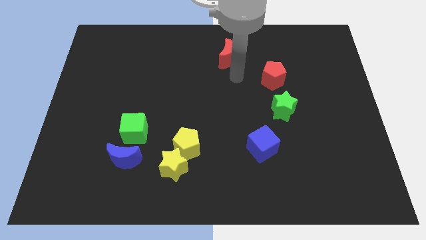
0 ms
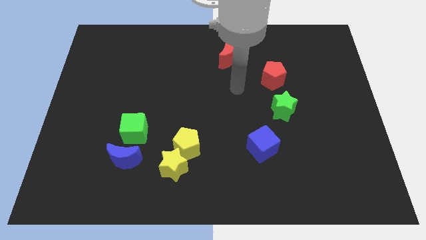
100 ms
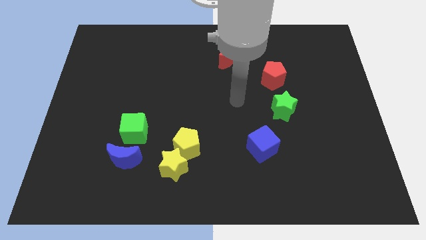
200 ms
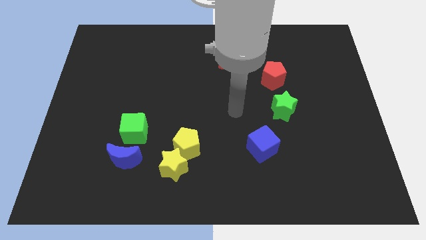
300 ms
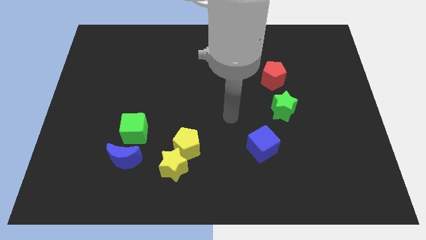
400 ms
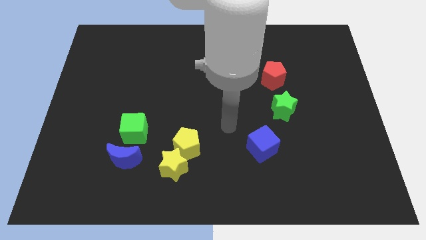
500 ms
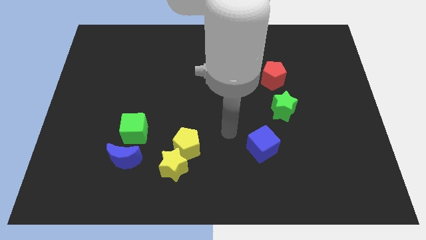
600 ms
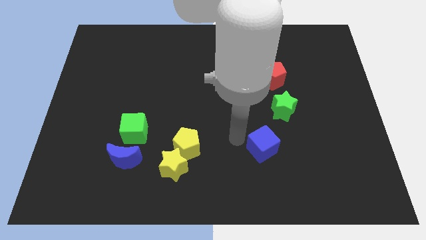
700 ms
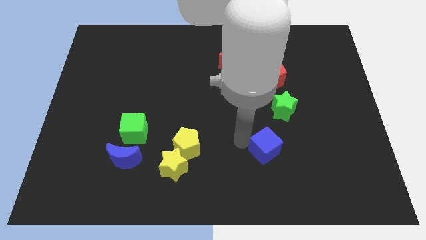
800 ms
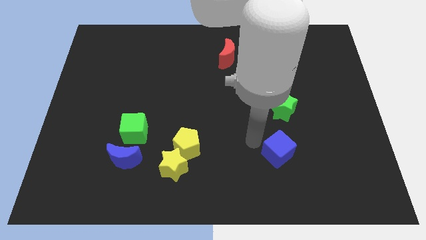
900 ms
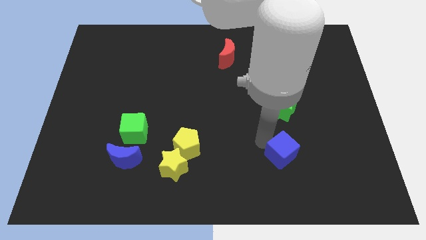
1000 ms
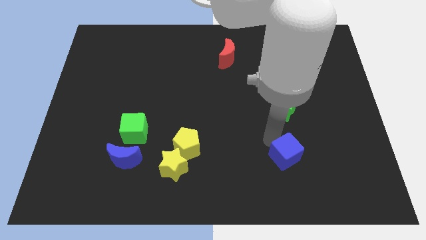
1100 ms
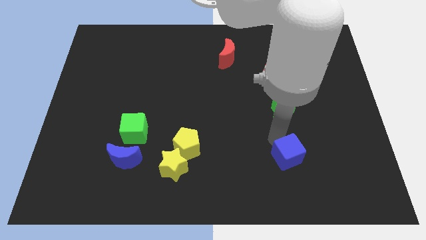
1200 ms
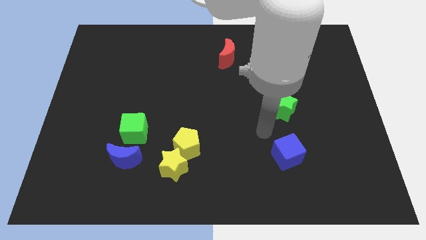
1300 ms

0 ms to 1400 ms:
slightly push the blue block towards bottom of center

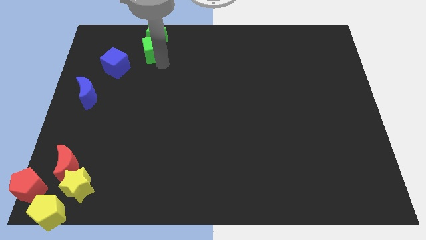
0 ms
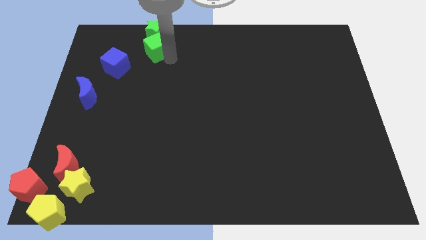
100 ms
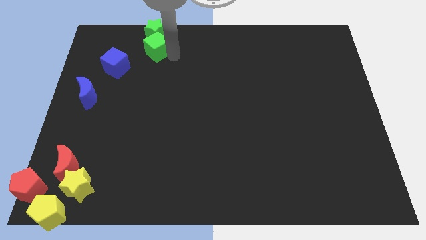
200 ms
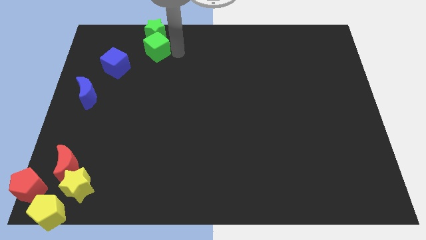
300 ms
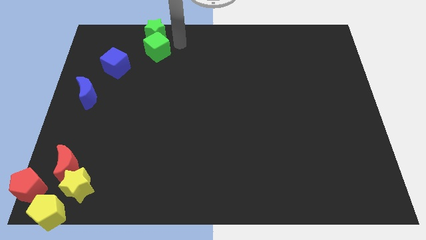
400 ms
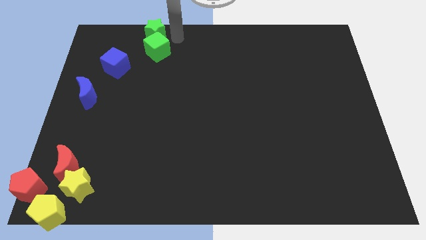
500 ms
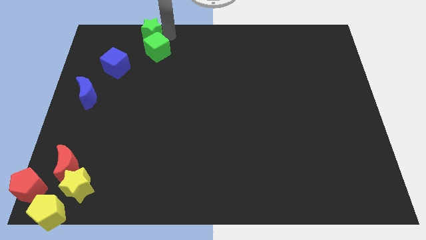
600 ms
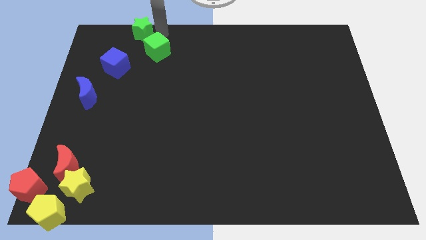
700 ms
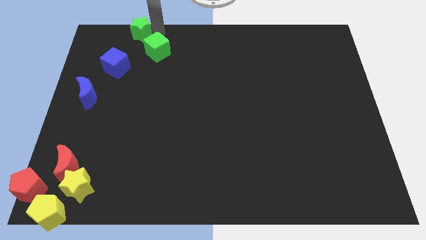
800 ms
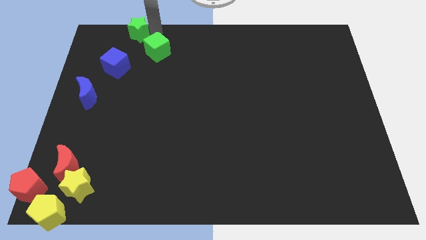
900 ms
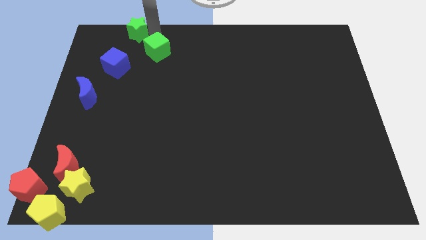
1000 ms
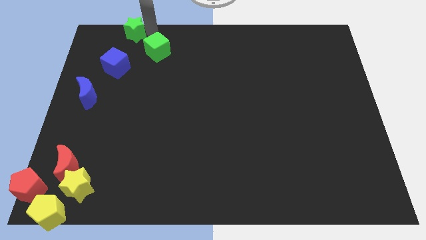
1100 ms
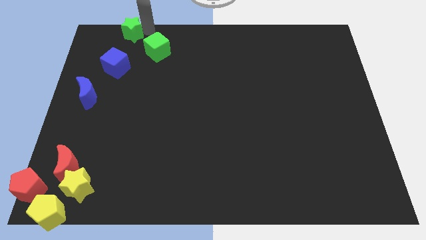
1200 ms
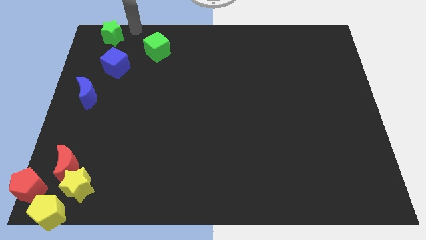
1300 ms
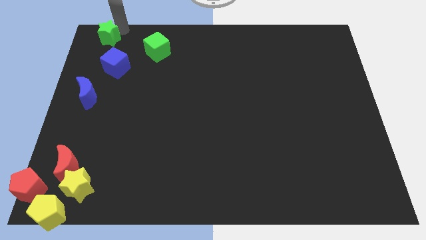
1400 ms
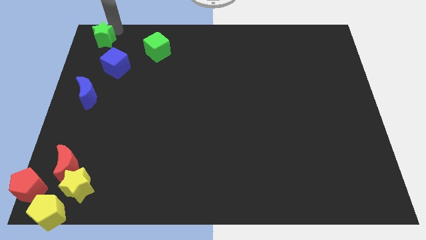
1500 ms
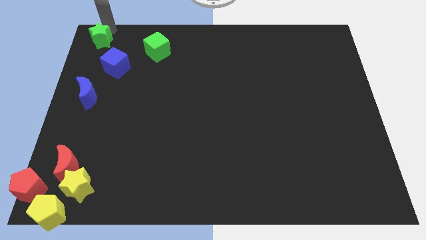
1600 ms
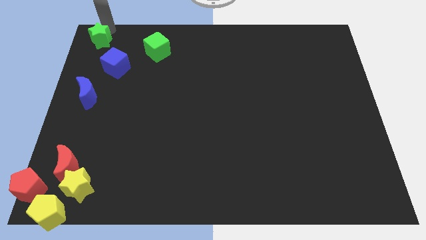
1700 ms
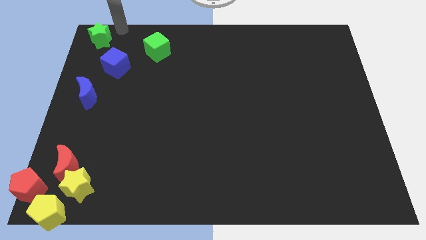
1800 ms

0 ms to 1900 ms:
move the green star towards the top left corner of the board

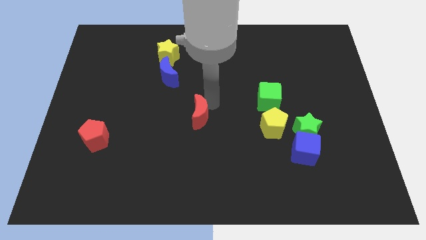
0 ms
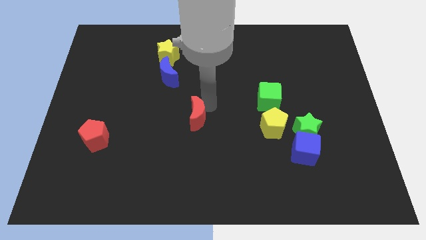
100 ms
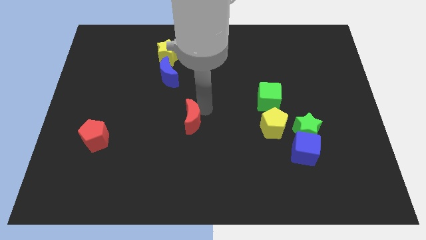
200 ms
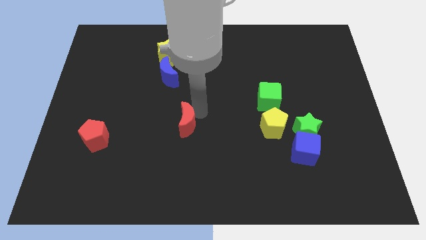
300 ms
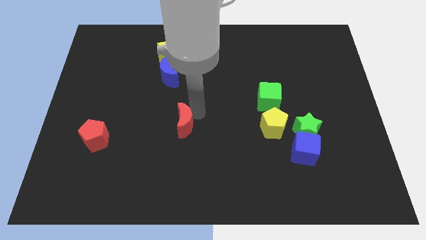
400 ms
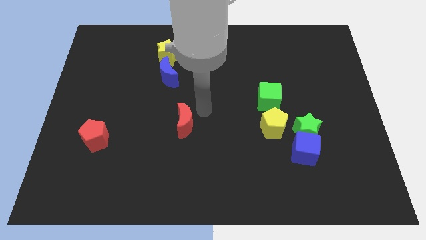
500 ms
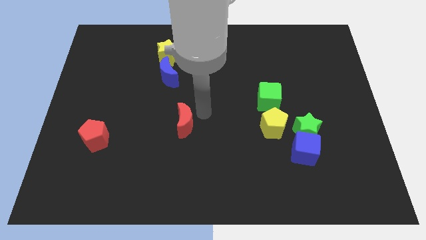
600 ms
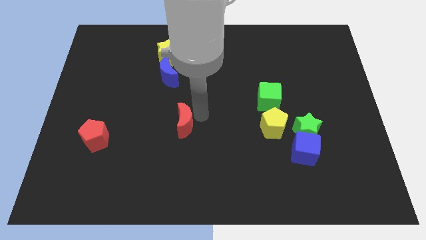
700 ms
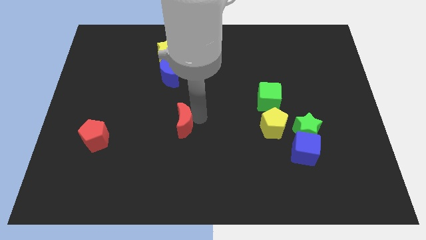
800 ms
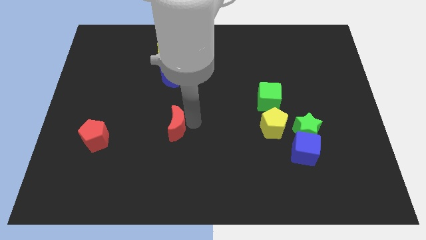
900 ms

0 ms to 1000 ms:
move the red crescent slightly to the left

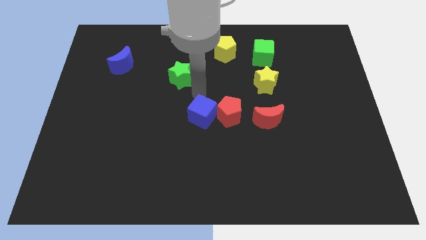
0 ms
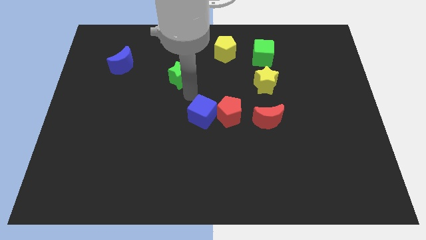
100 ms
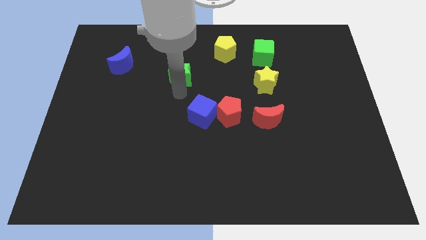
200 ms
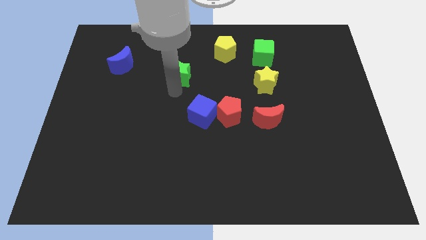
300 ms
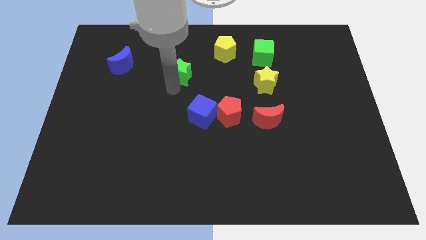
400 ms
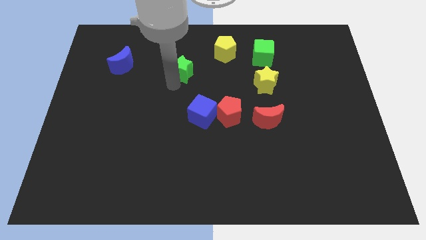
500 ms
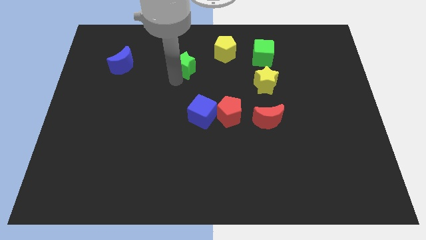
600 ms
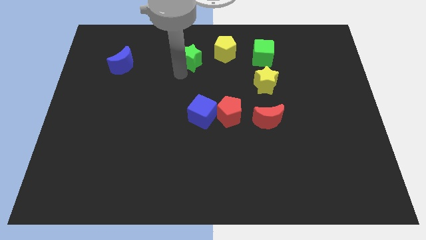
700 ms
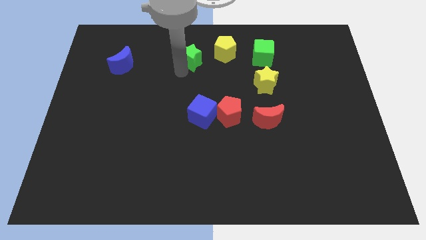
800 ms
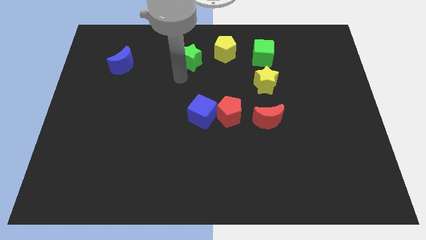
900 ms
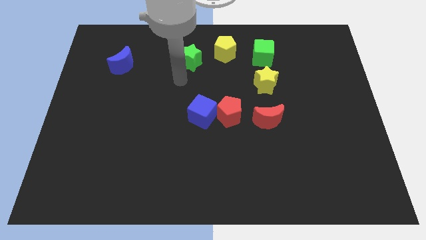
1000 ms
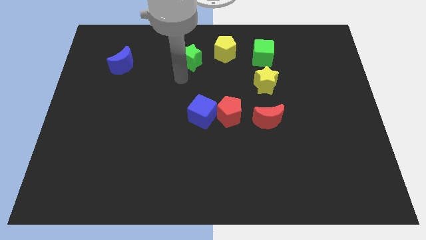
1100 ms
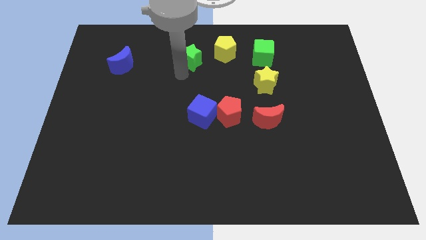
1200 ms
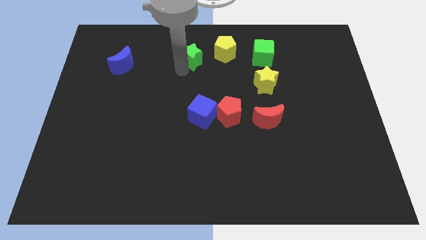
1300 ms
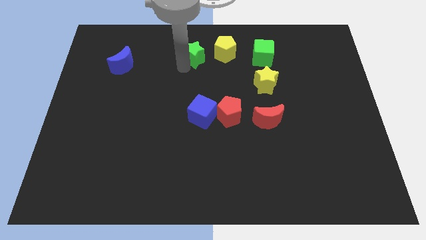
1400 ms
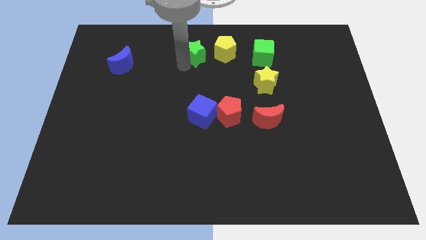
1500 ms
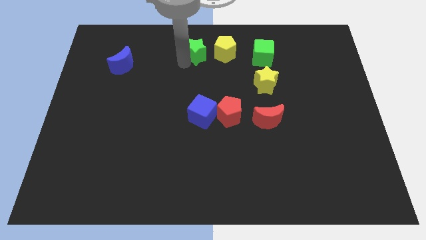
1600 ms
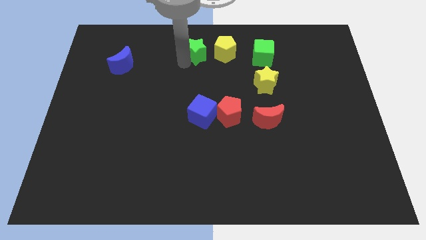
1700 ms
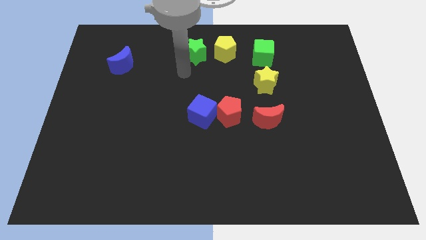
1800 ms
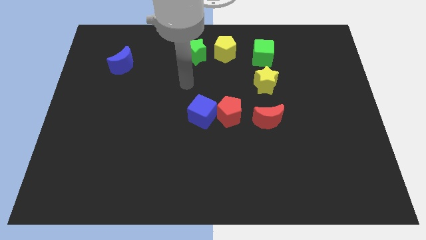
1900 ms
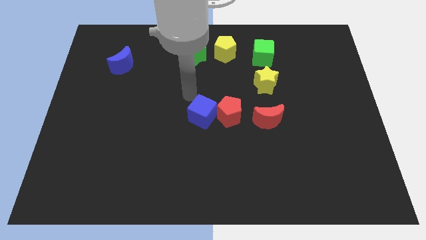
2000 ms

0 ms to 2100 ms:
move the green star towards top center

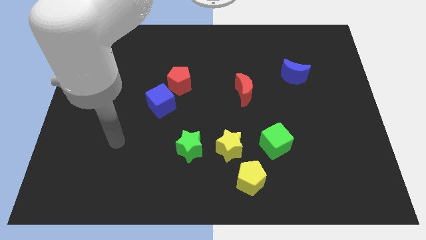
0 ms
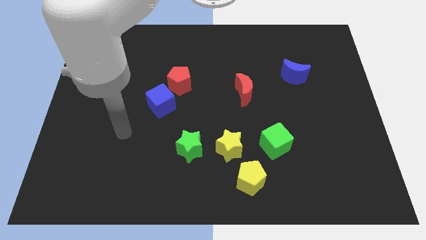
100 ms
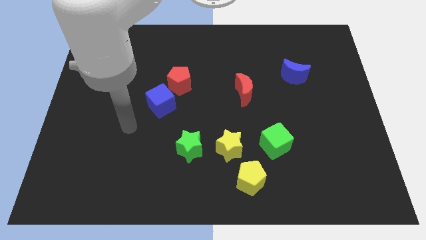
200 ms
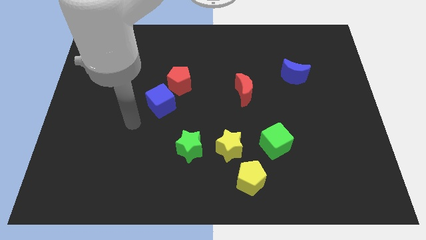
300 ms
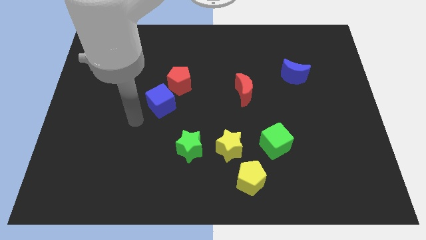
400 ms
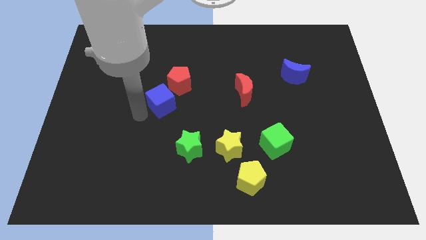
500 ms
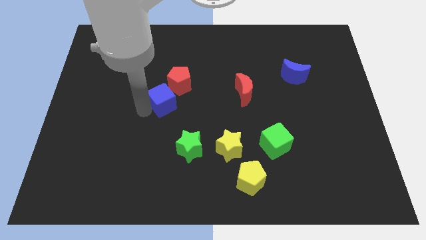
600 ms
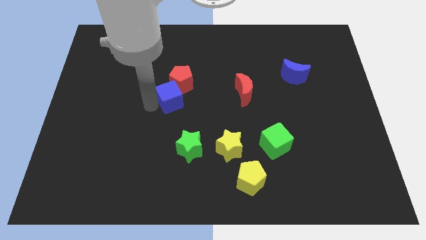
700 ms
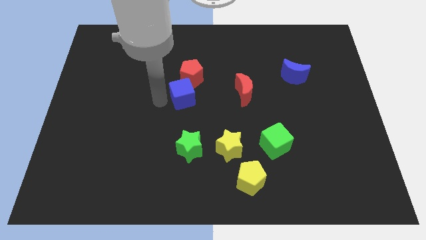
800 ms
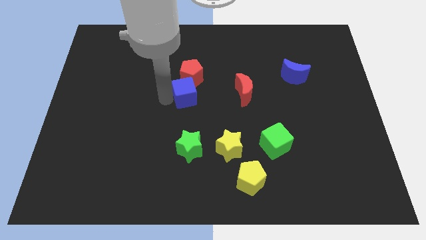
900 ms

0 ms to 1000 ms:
push blue cube in to red pentagon

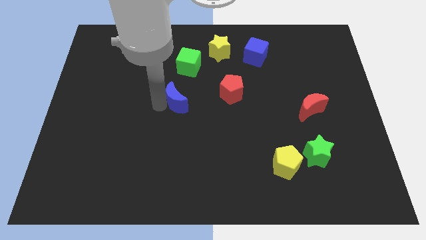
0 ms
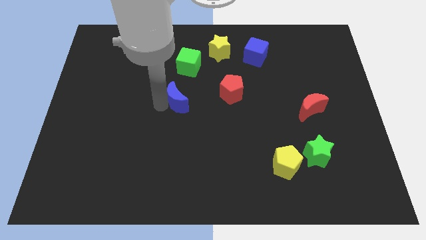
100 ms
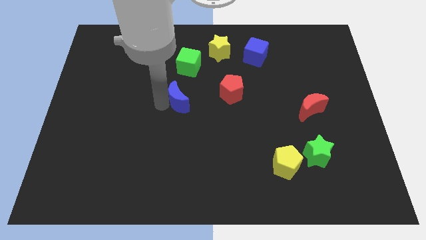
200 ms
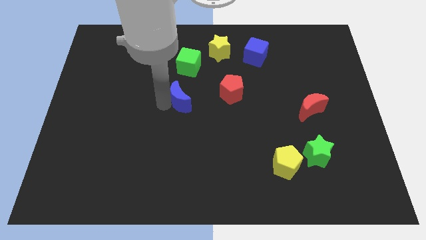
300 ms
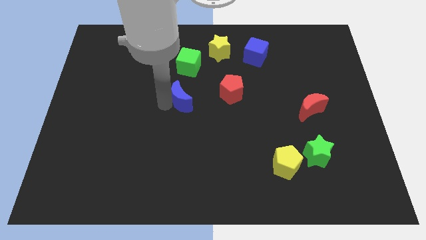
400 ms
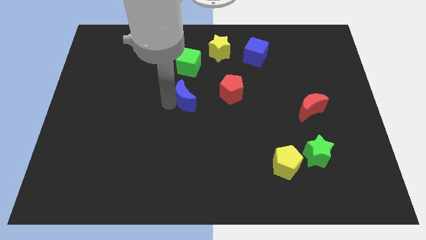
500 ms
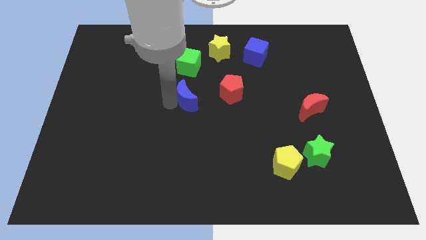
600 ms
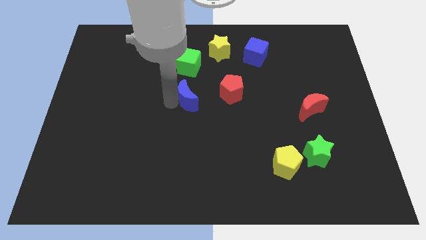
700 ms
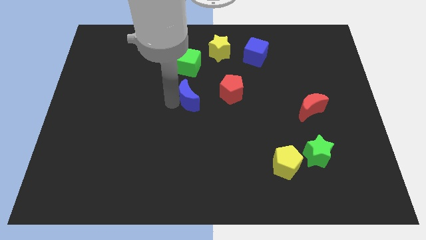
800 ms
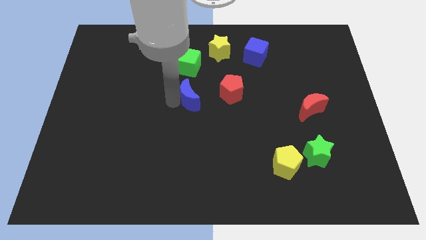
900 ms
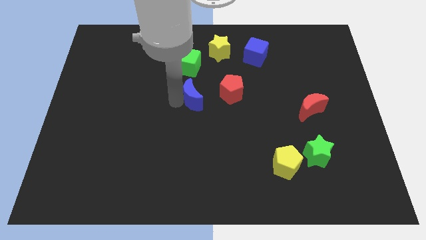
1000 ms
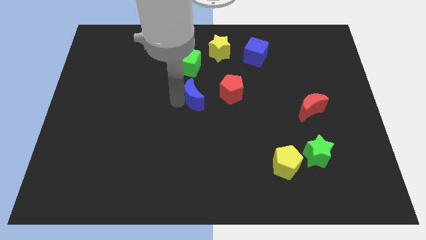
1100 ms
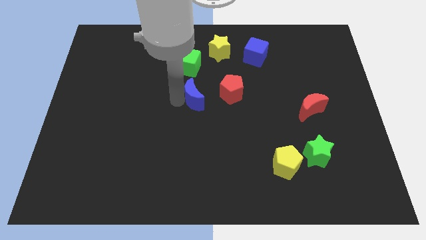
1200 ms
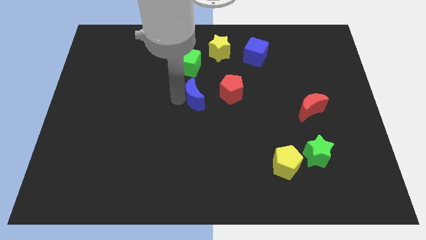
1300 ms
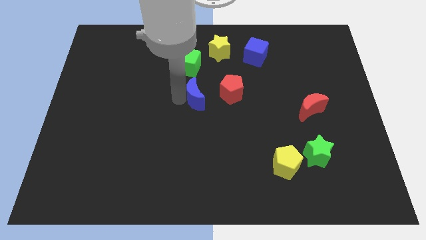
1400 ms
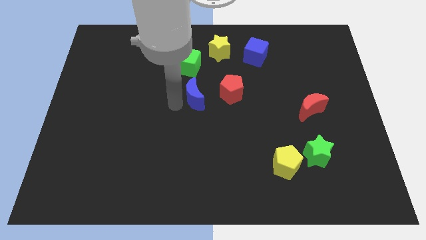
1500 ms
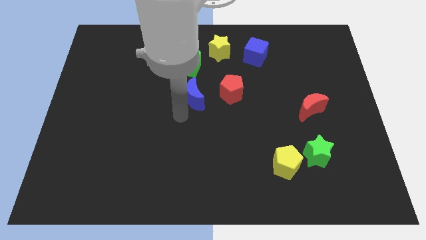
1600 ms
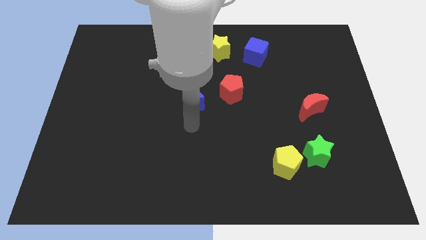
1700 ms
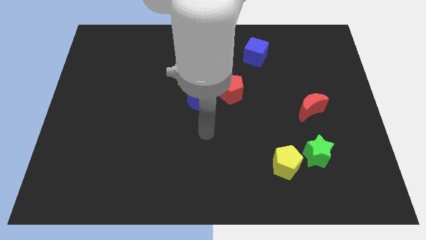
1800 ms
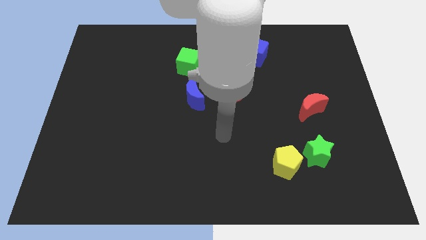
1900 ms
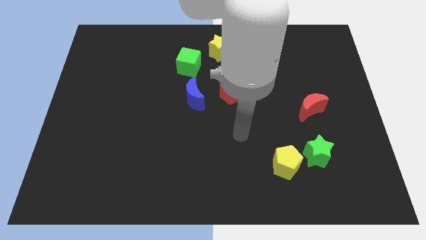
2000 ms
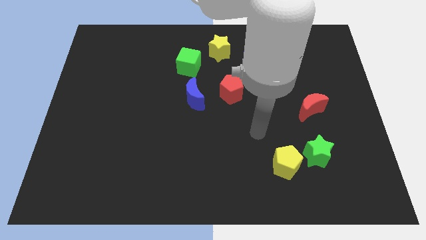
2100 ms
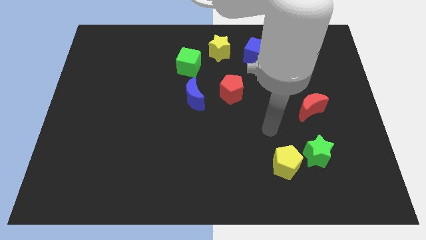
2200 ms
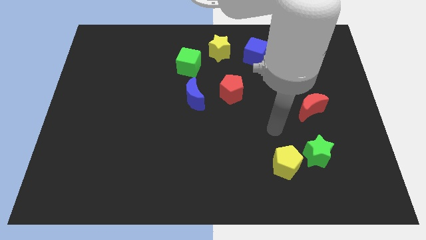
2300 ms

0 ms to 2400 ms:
place blue crescent to the left of red pentagon
